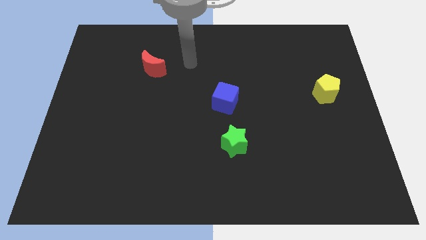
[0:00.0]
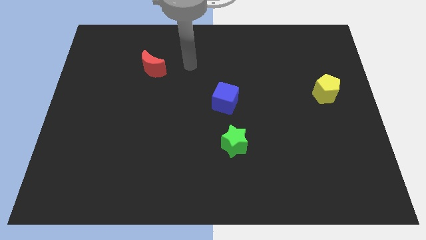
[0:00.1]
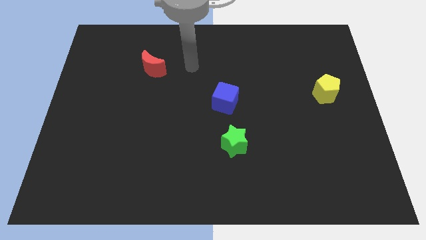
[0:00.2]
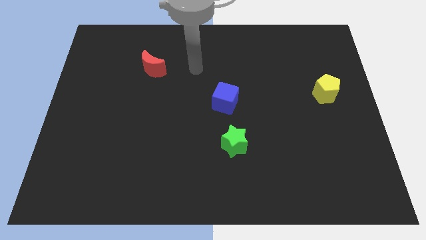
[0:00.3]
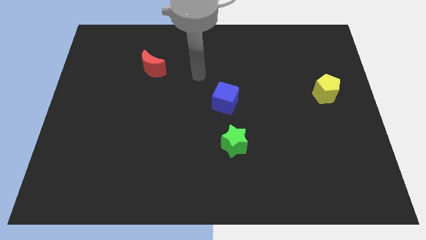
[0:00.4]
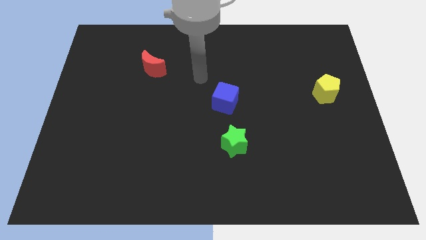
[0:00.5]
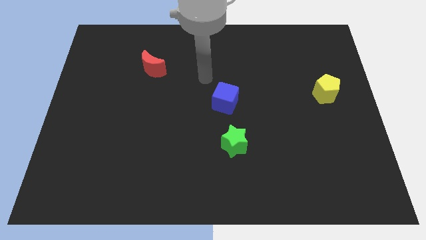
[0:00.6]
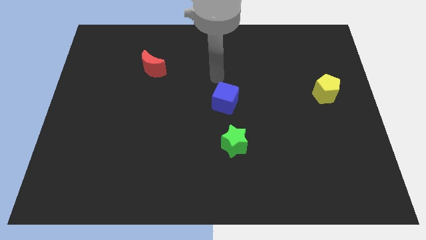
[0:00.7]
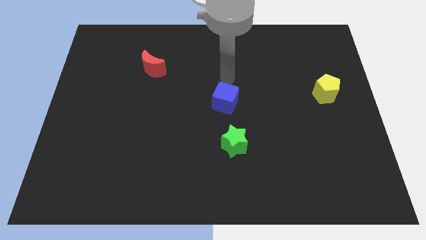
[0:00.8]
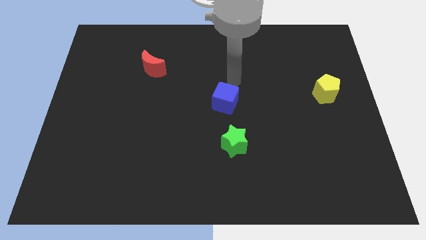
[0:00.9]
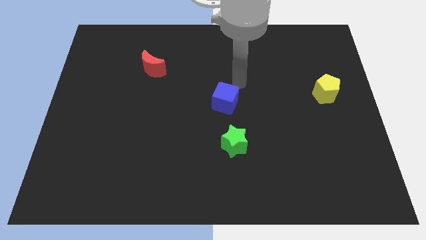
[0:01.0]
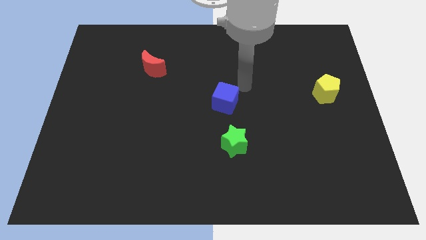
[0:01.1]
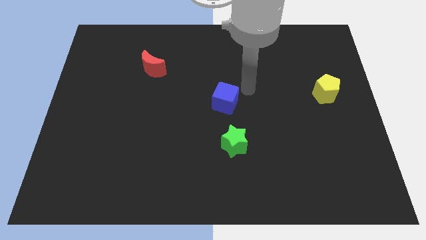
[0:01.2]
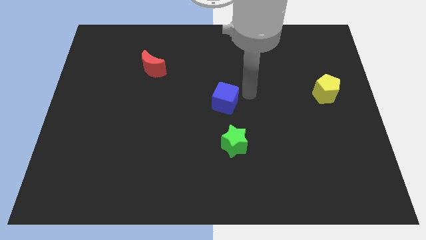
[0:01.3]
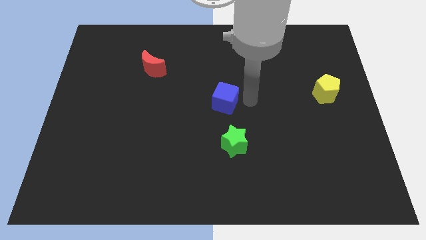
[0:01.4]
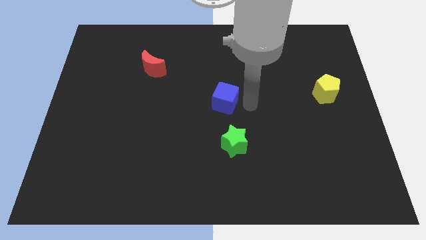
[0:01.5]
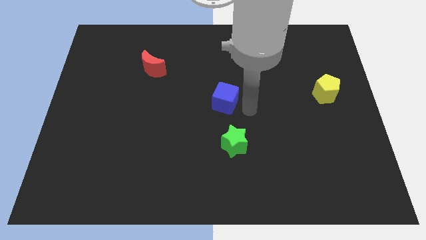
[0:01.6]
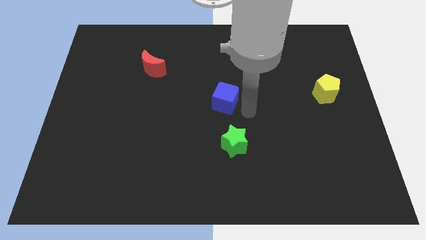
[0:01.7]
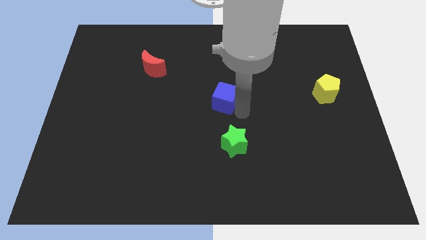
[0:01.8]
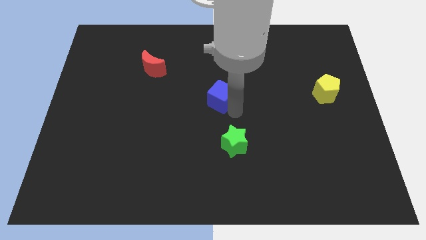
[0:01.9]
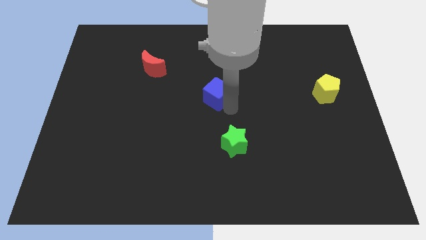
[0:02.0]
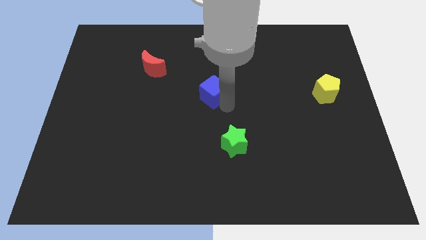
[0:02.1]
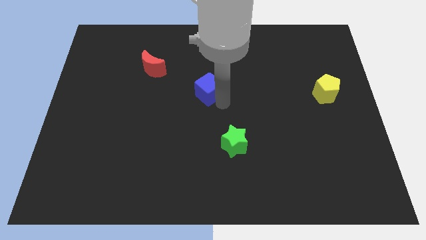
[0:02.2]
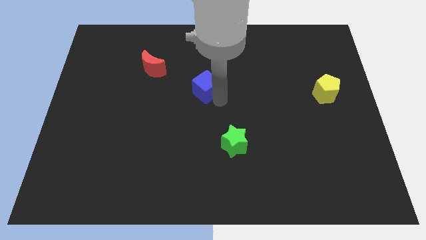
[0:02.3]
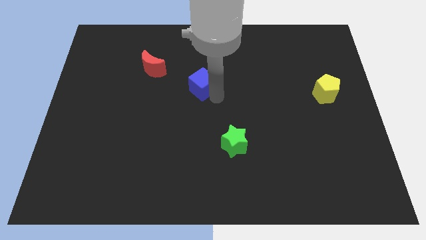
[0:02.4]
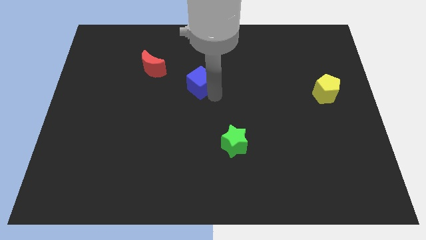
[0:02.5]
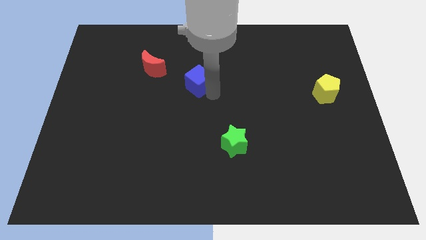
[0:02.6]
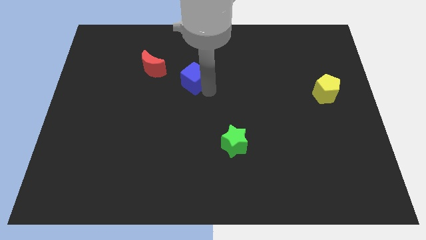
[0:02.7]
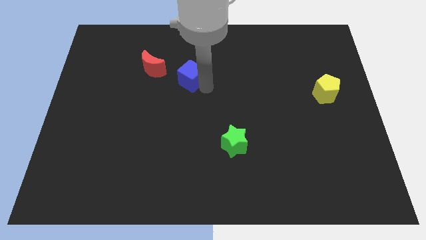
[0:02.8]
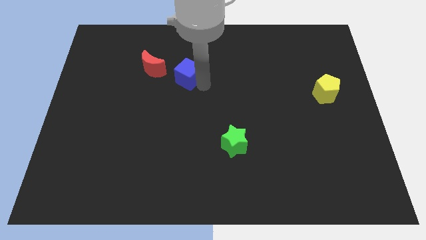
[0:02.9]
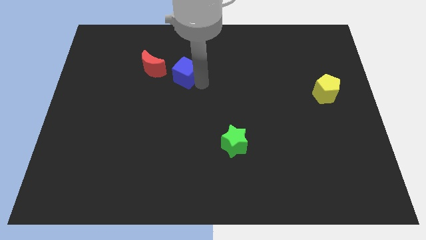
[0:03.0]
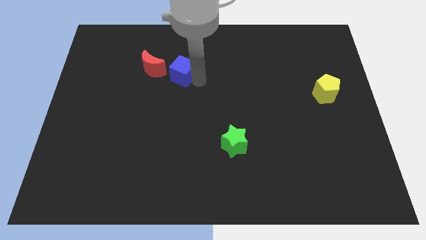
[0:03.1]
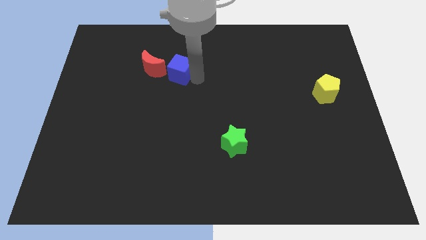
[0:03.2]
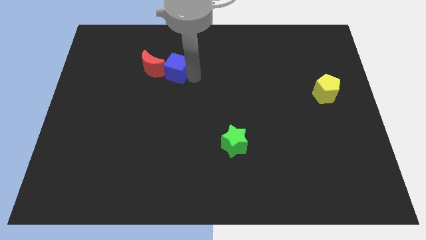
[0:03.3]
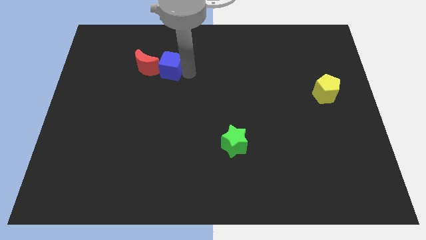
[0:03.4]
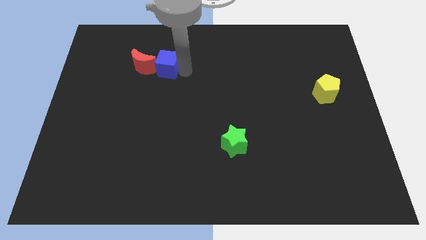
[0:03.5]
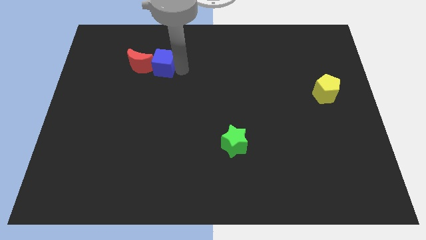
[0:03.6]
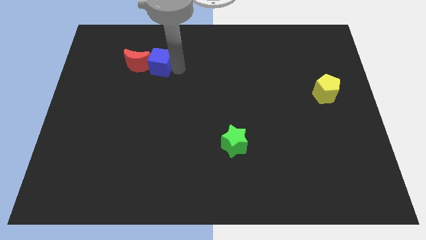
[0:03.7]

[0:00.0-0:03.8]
push the cube towards the moon

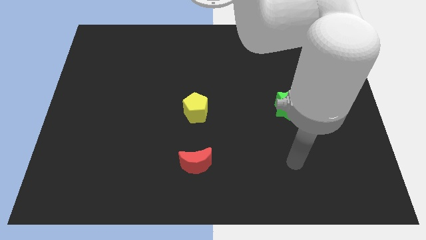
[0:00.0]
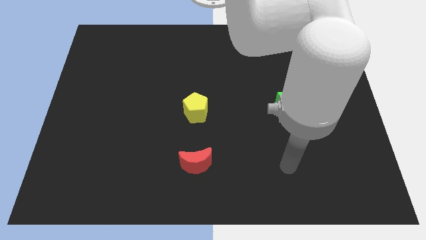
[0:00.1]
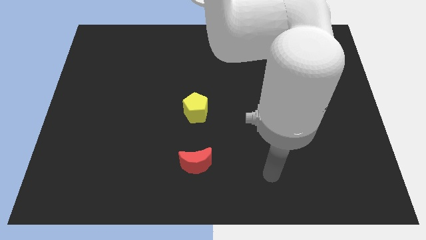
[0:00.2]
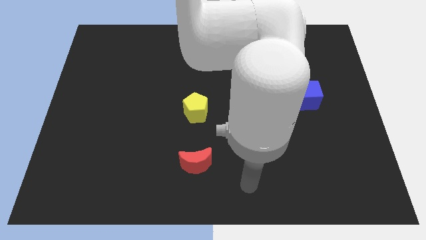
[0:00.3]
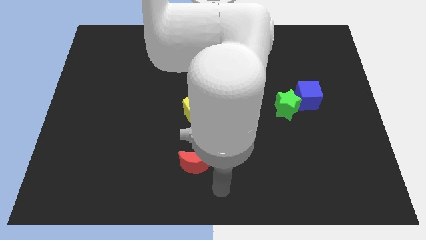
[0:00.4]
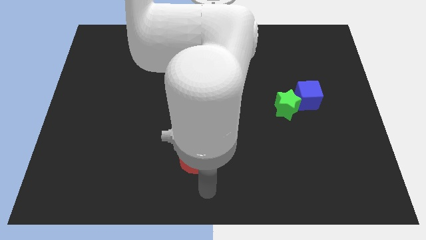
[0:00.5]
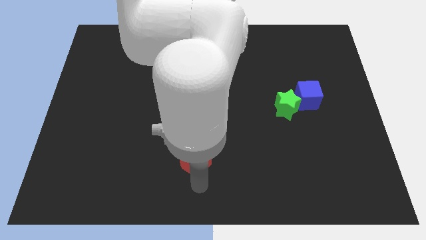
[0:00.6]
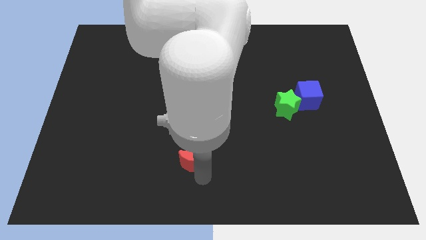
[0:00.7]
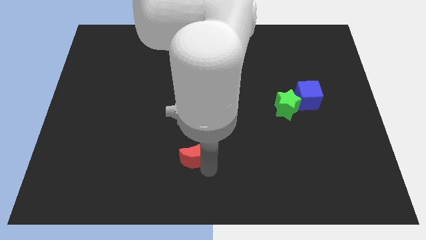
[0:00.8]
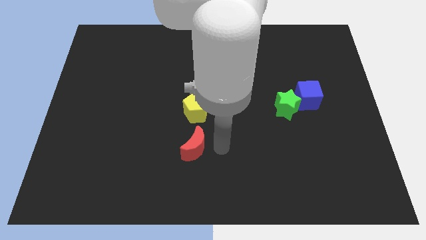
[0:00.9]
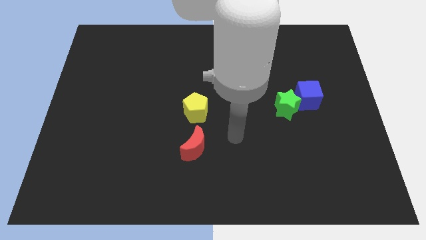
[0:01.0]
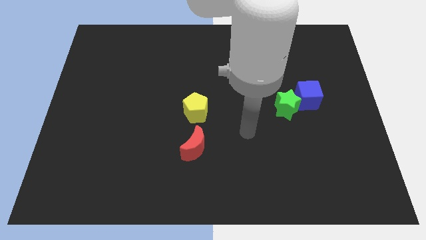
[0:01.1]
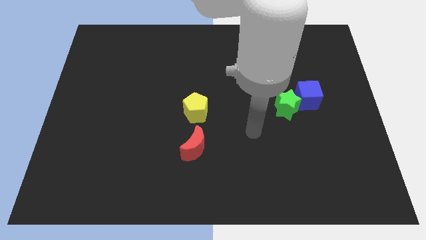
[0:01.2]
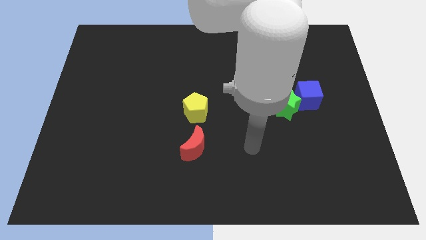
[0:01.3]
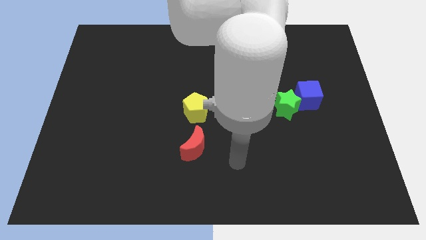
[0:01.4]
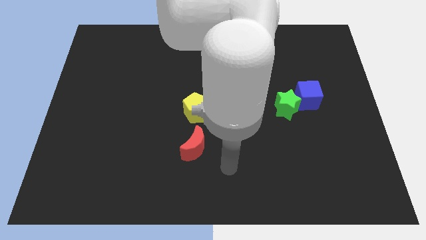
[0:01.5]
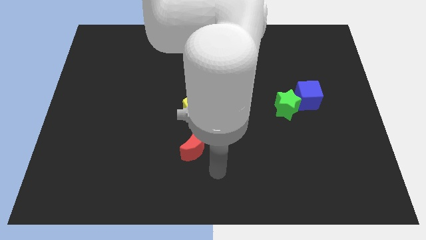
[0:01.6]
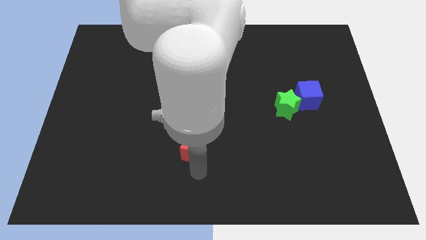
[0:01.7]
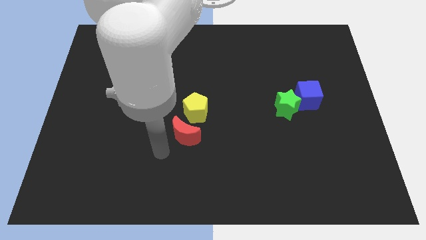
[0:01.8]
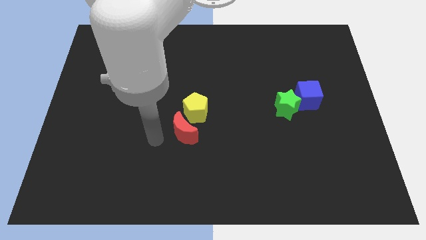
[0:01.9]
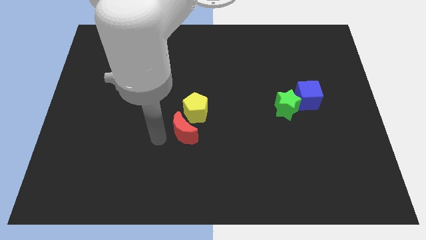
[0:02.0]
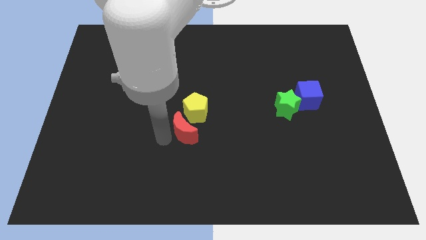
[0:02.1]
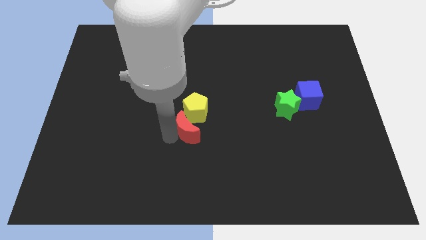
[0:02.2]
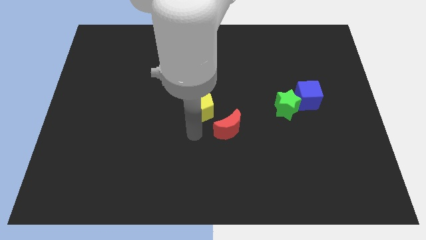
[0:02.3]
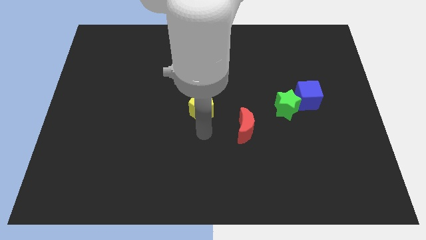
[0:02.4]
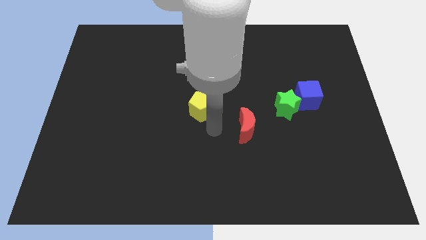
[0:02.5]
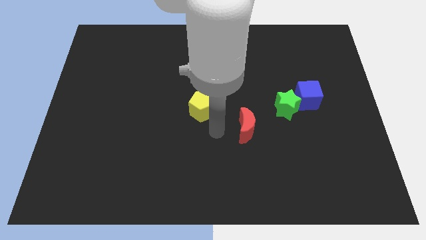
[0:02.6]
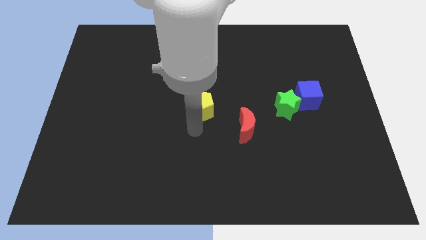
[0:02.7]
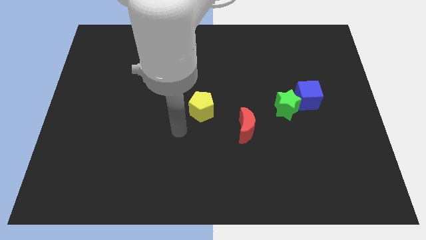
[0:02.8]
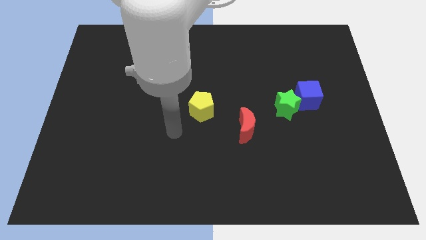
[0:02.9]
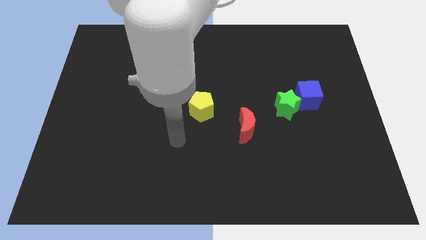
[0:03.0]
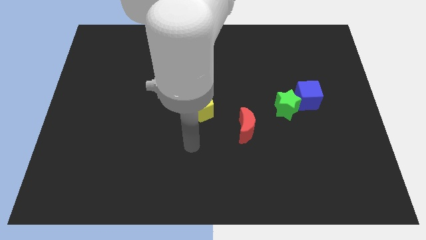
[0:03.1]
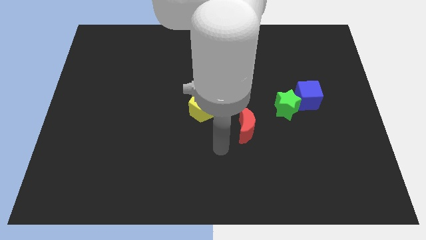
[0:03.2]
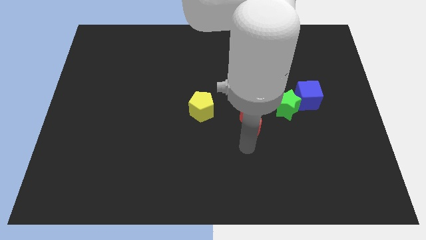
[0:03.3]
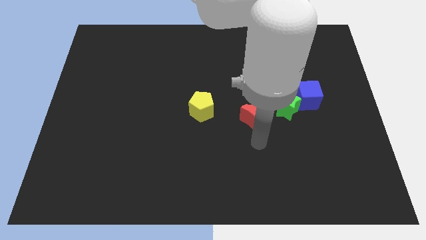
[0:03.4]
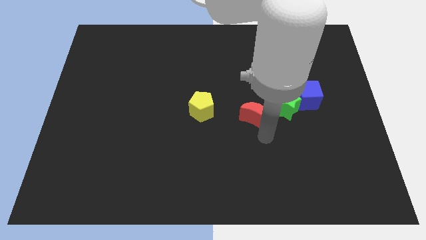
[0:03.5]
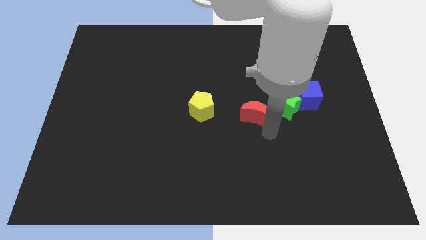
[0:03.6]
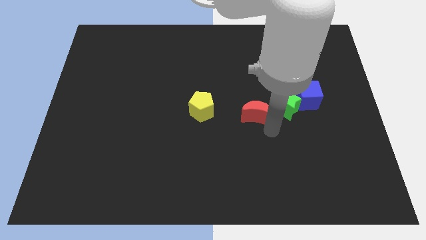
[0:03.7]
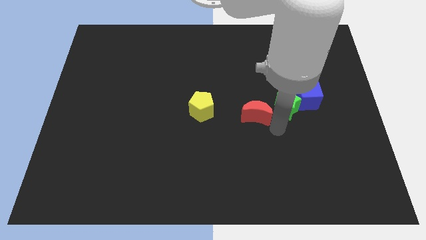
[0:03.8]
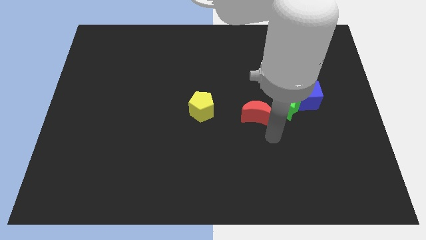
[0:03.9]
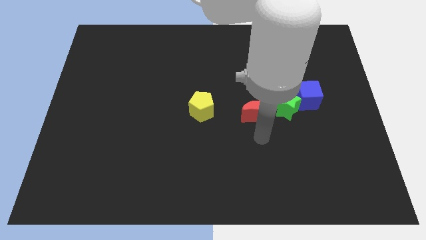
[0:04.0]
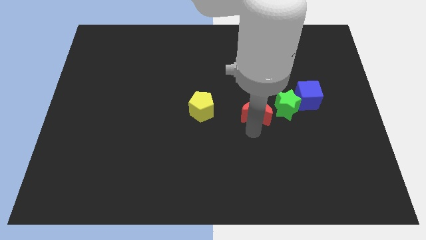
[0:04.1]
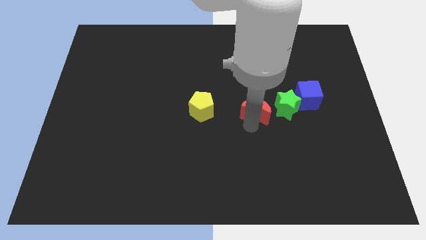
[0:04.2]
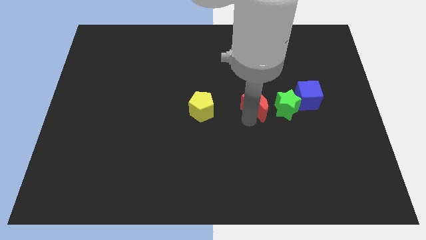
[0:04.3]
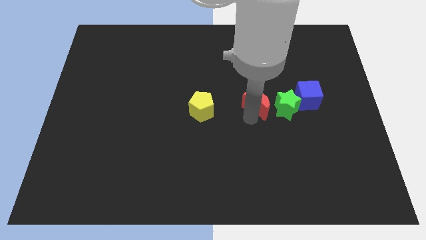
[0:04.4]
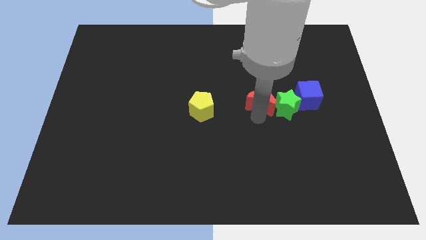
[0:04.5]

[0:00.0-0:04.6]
put the moon towards the green block

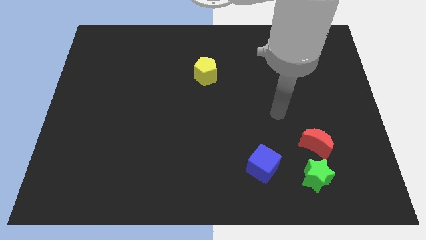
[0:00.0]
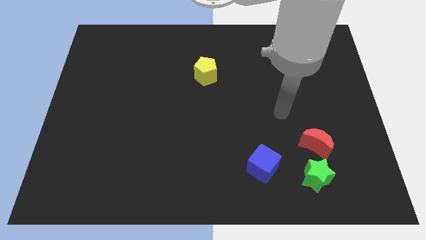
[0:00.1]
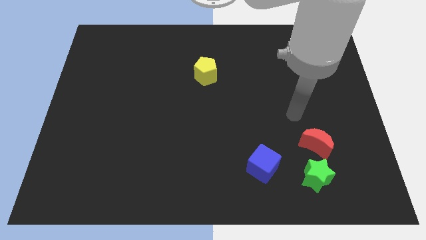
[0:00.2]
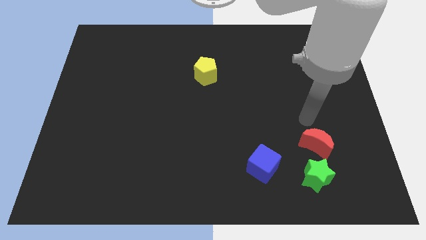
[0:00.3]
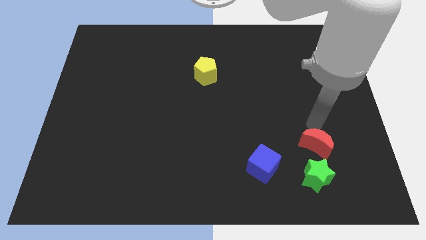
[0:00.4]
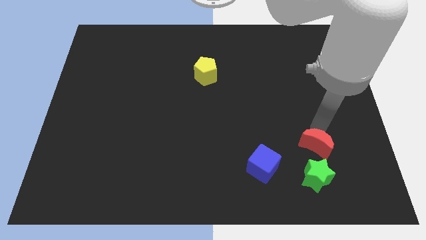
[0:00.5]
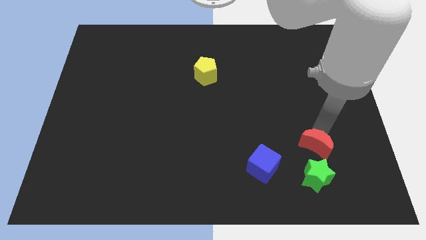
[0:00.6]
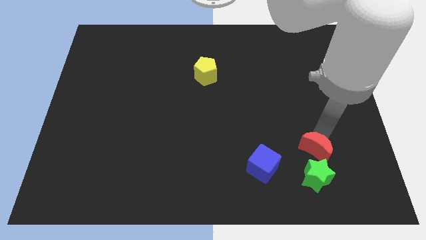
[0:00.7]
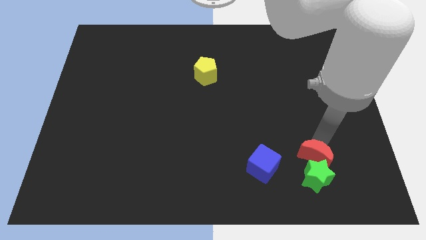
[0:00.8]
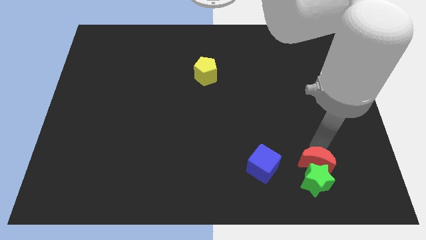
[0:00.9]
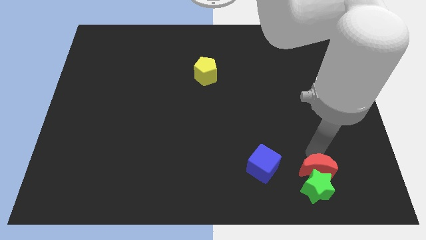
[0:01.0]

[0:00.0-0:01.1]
put the red moon close to the green star
